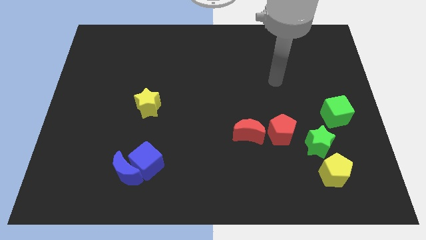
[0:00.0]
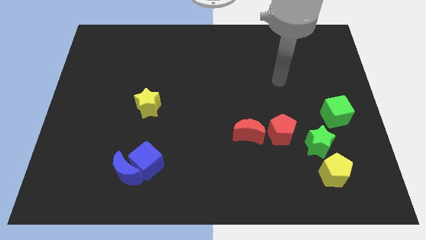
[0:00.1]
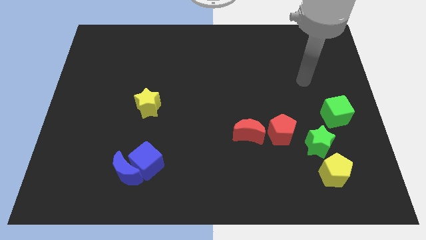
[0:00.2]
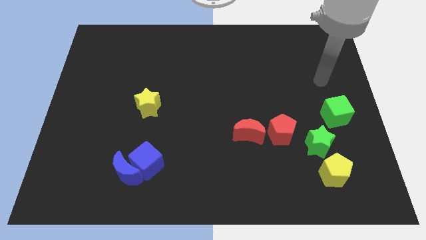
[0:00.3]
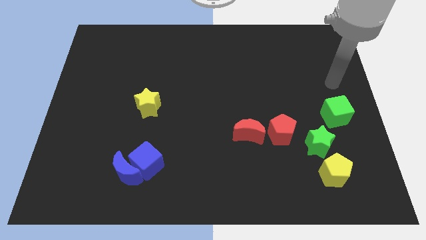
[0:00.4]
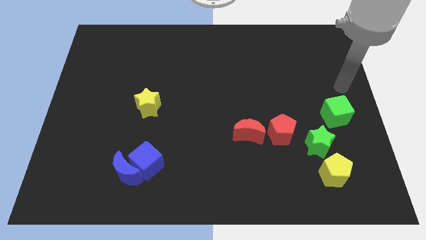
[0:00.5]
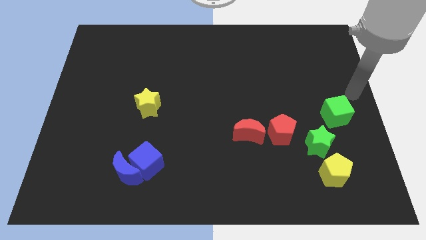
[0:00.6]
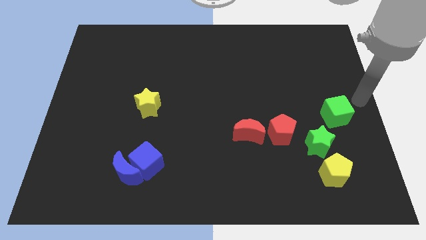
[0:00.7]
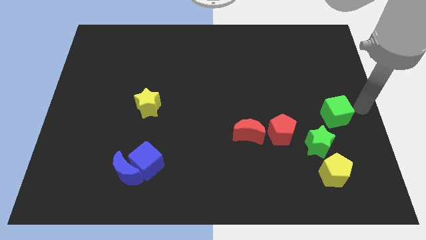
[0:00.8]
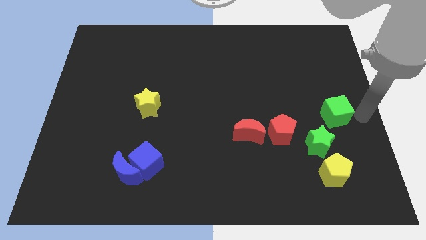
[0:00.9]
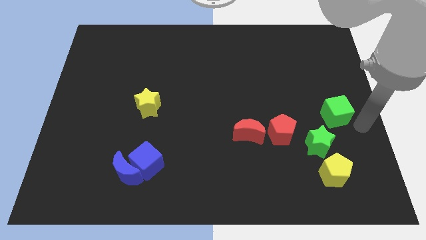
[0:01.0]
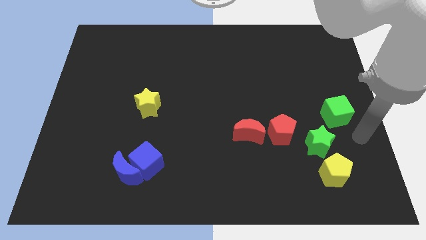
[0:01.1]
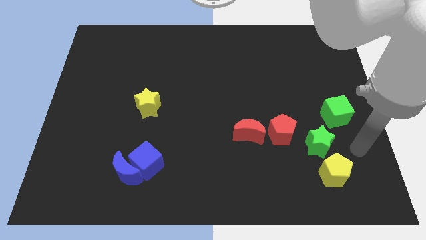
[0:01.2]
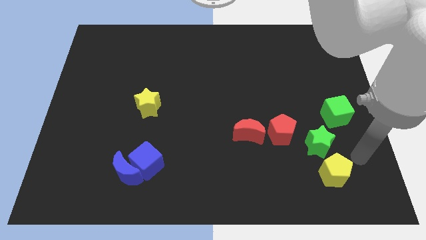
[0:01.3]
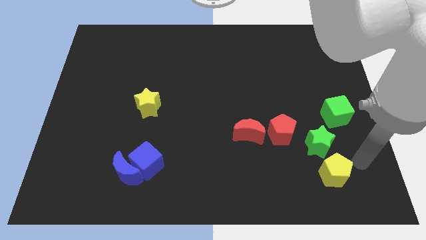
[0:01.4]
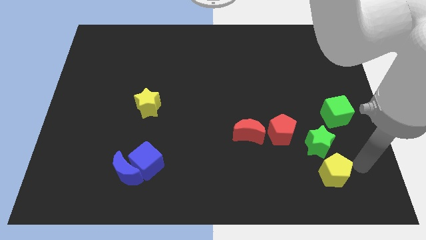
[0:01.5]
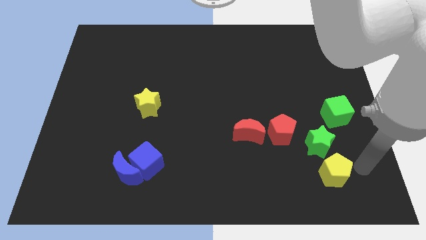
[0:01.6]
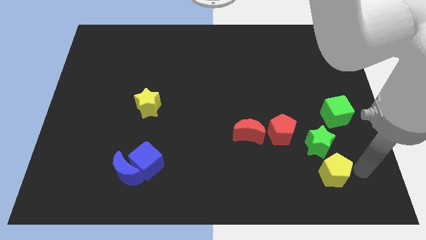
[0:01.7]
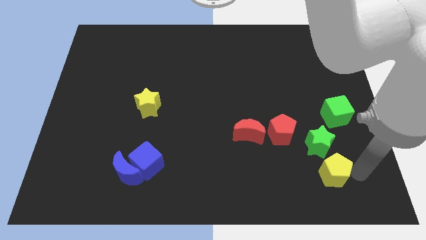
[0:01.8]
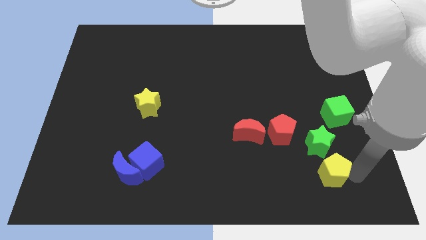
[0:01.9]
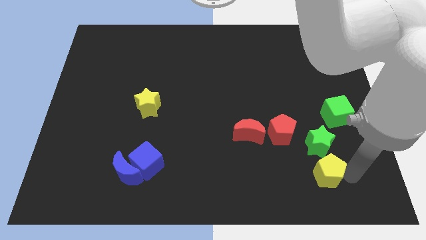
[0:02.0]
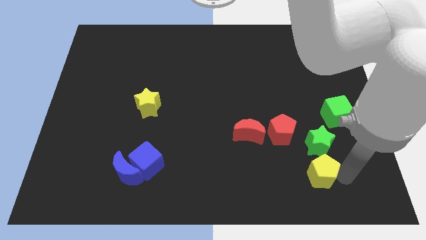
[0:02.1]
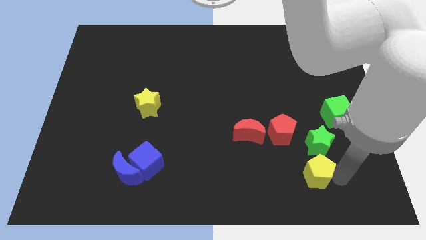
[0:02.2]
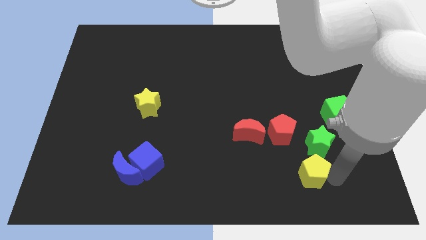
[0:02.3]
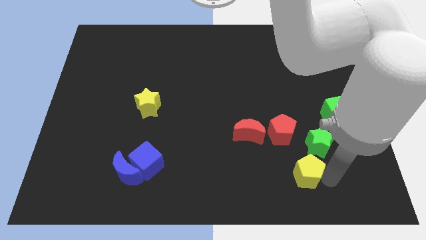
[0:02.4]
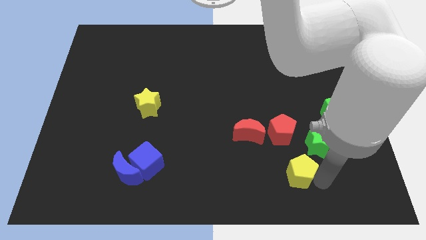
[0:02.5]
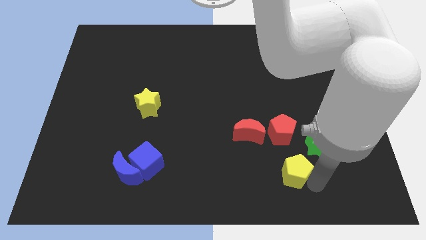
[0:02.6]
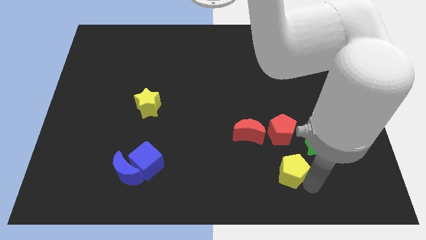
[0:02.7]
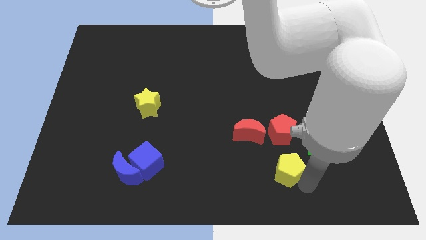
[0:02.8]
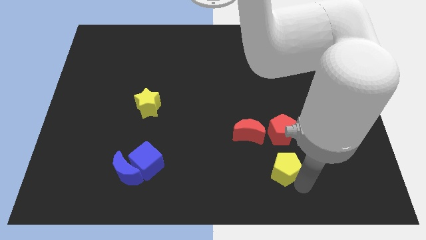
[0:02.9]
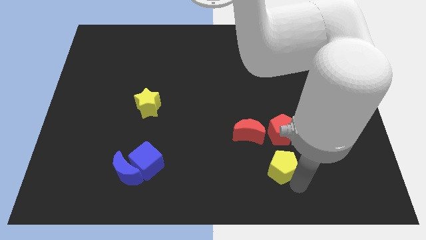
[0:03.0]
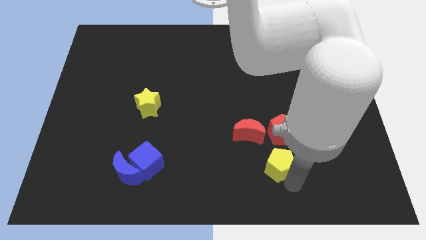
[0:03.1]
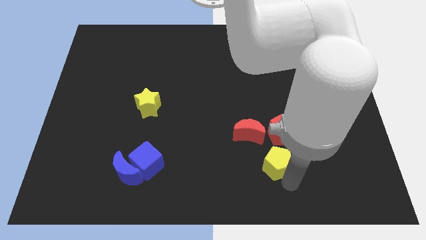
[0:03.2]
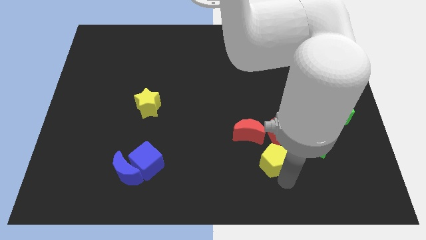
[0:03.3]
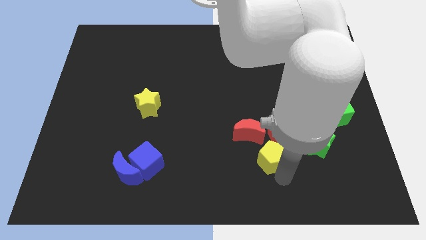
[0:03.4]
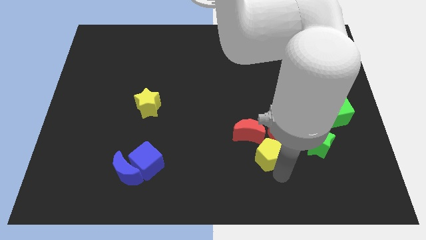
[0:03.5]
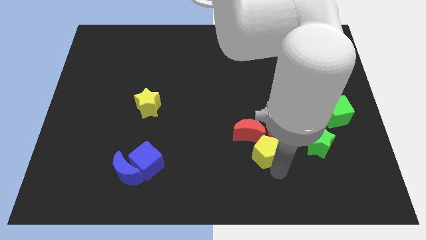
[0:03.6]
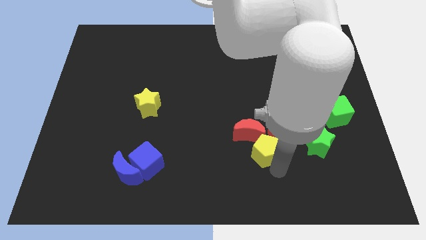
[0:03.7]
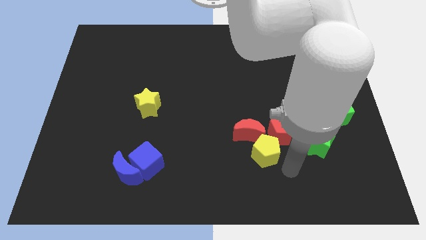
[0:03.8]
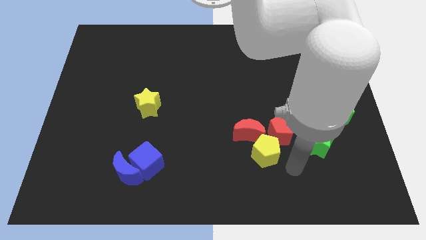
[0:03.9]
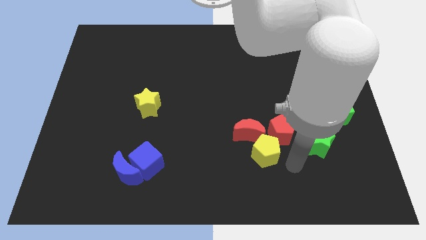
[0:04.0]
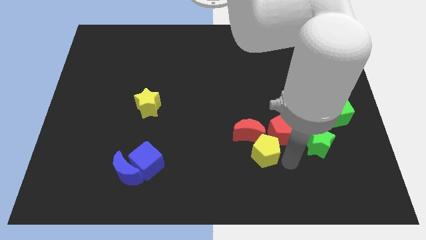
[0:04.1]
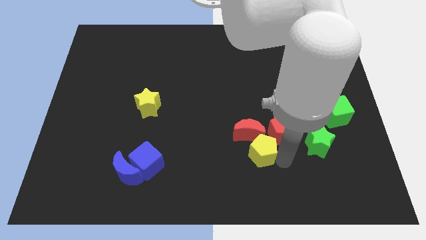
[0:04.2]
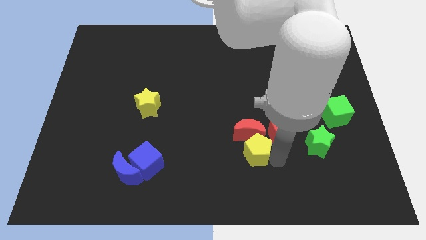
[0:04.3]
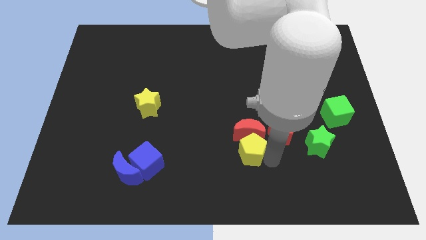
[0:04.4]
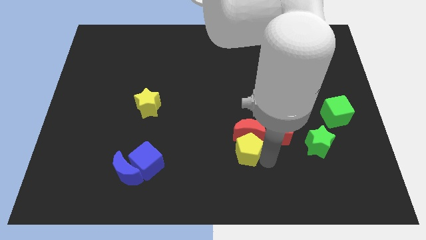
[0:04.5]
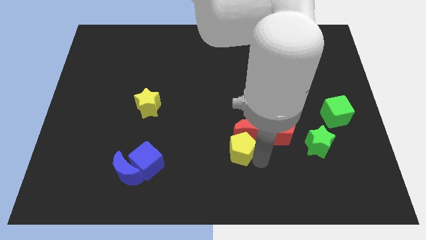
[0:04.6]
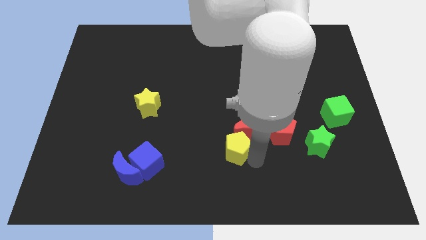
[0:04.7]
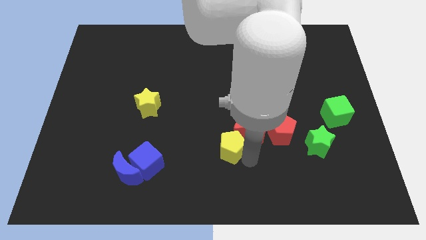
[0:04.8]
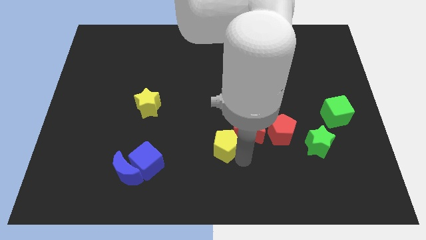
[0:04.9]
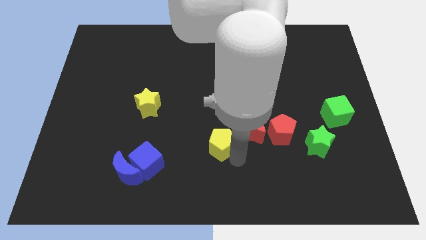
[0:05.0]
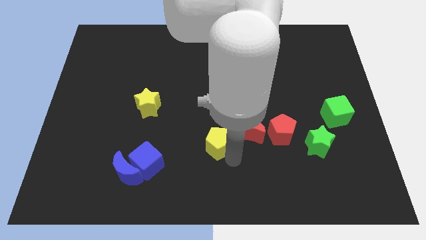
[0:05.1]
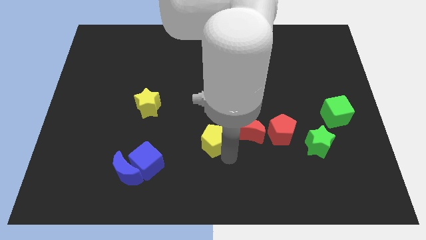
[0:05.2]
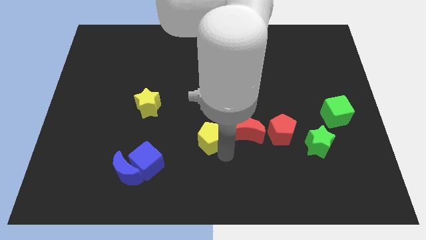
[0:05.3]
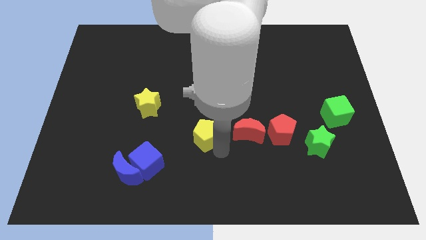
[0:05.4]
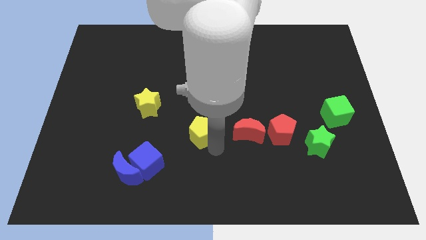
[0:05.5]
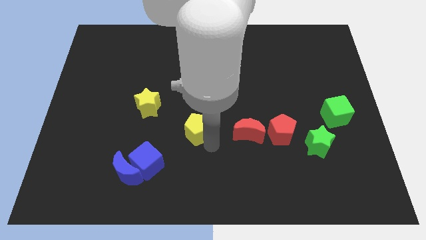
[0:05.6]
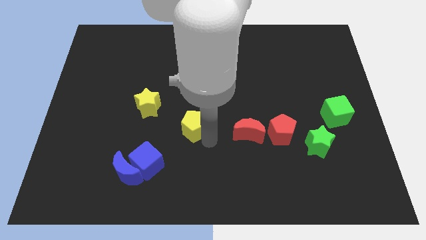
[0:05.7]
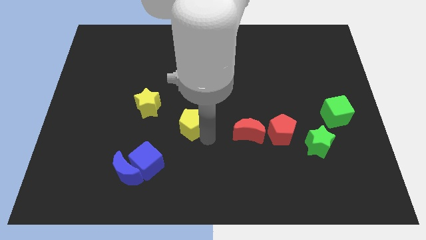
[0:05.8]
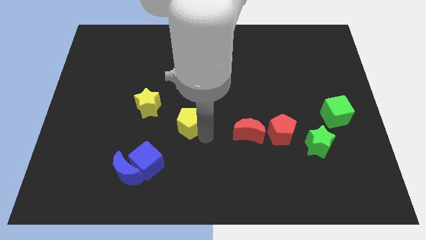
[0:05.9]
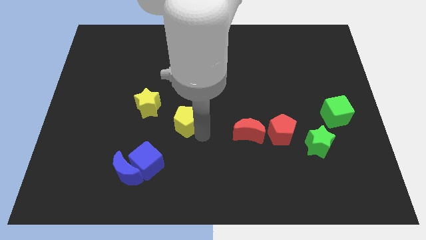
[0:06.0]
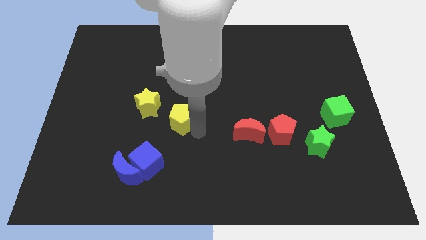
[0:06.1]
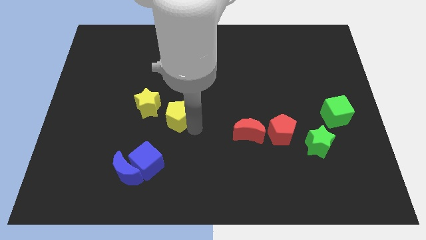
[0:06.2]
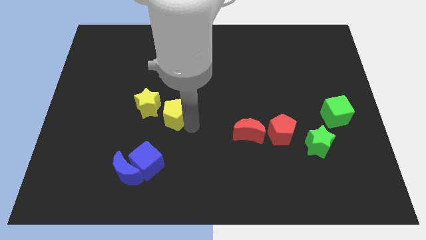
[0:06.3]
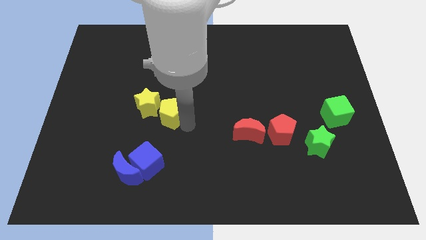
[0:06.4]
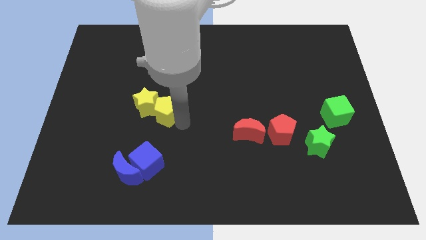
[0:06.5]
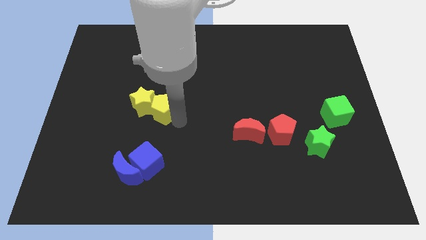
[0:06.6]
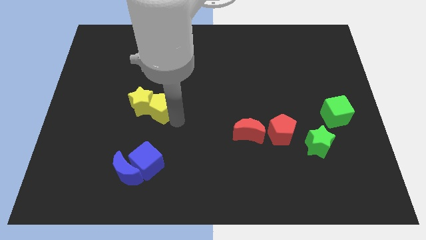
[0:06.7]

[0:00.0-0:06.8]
slide the yellow pentagon close to the yellow star

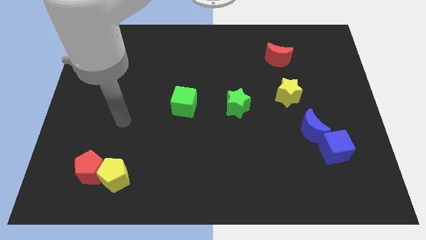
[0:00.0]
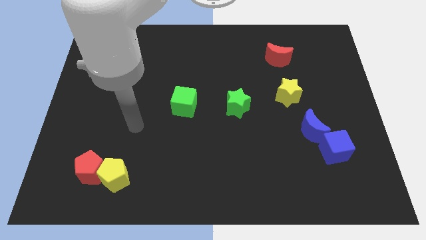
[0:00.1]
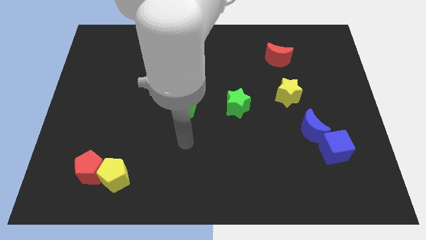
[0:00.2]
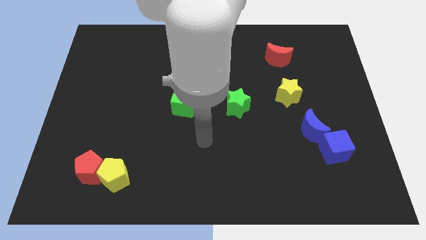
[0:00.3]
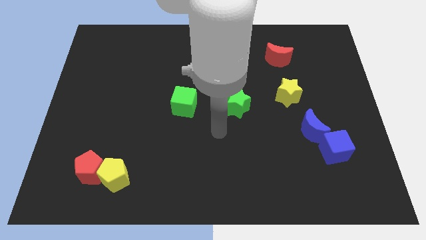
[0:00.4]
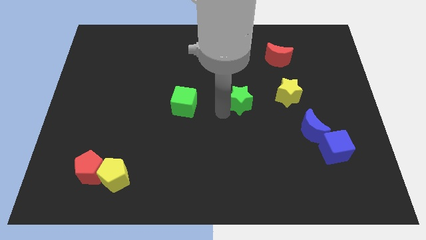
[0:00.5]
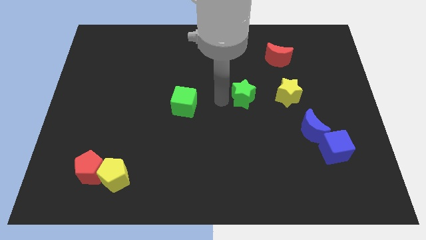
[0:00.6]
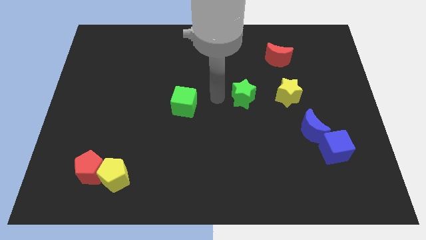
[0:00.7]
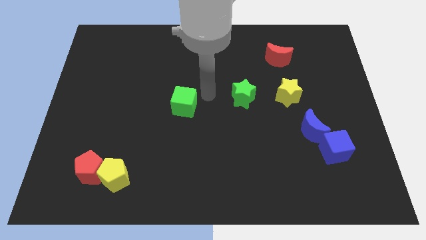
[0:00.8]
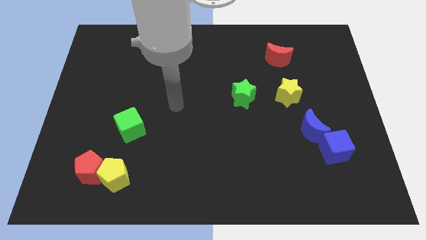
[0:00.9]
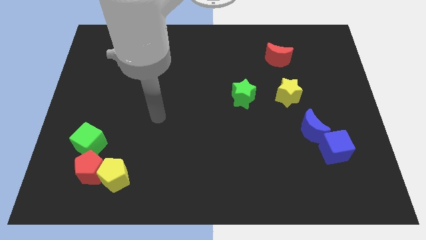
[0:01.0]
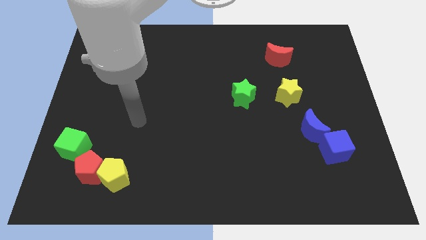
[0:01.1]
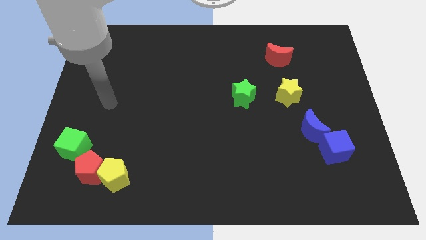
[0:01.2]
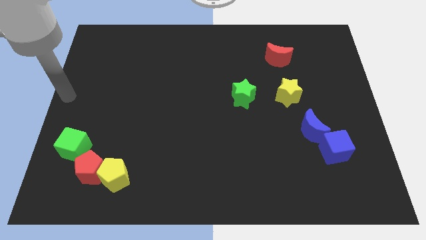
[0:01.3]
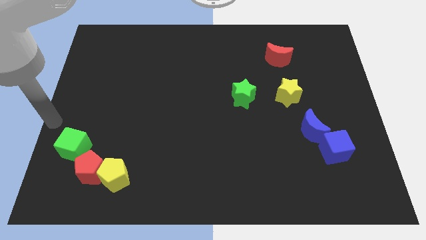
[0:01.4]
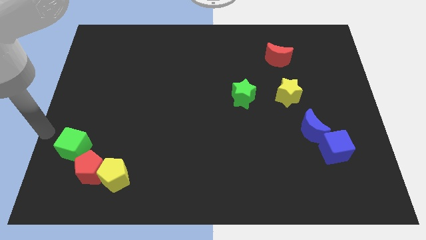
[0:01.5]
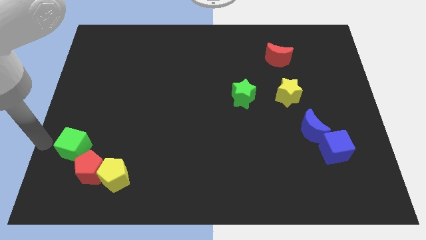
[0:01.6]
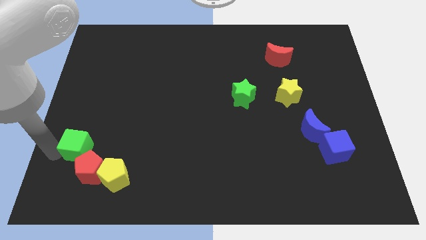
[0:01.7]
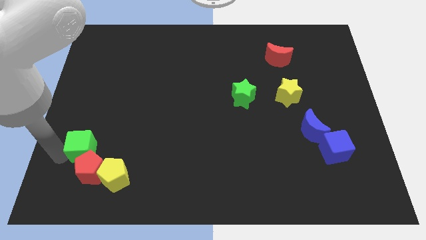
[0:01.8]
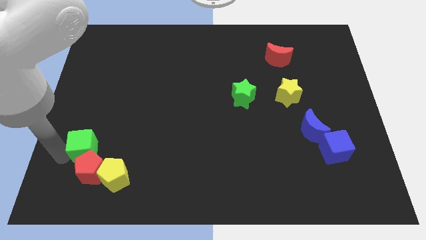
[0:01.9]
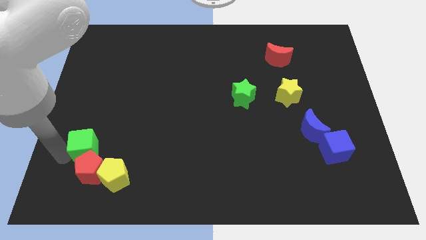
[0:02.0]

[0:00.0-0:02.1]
move the green cube close to the red pentagon
